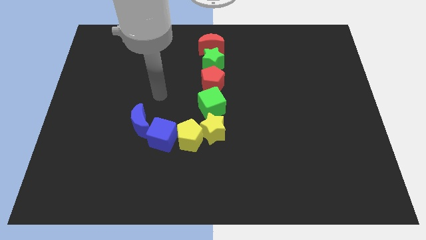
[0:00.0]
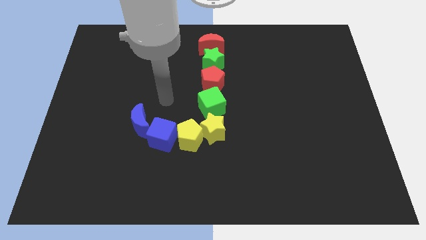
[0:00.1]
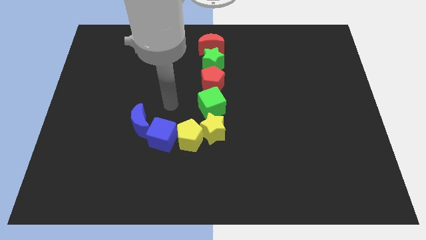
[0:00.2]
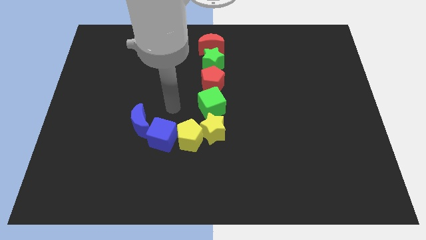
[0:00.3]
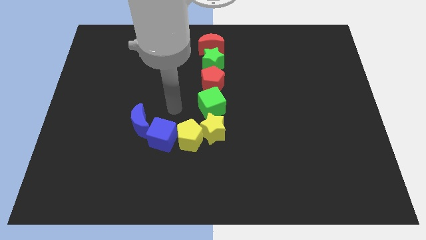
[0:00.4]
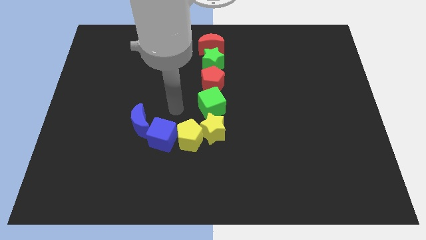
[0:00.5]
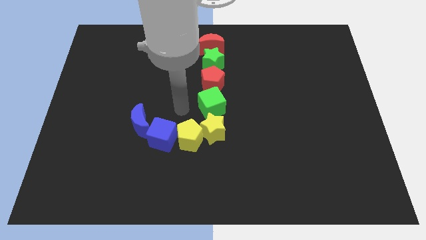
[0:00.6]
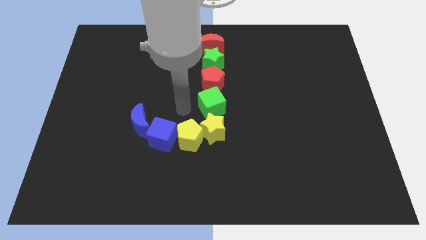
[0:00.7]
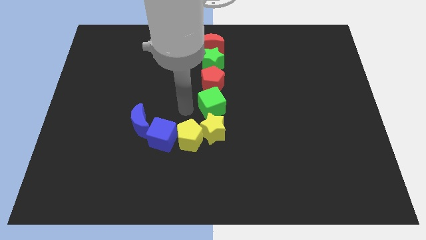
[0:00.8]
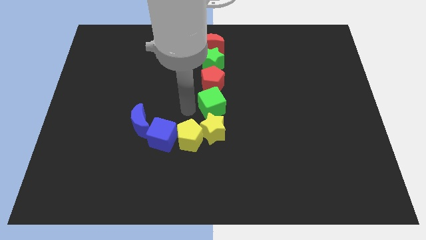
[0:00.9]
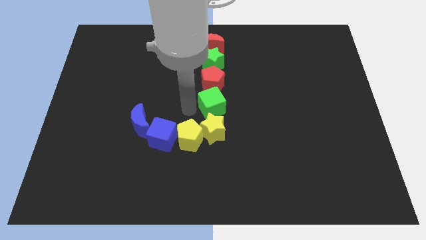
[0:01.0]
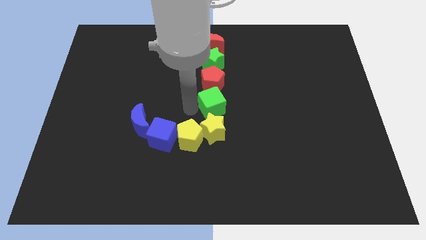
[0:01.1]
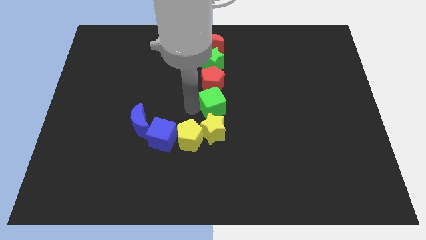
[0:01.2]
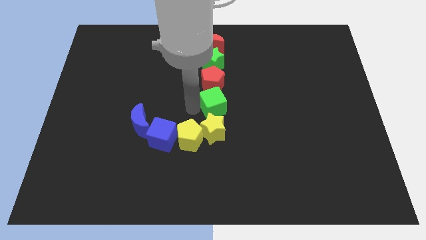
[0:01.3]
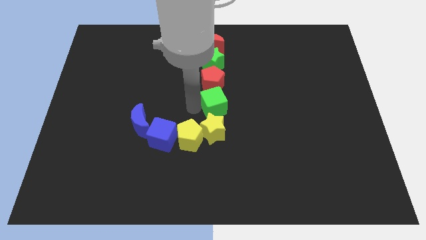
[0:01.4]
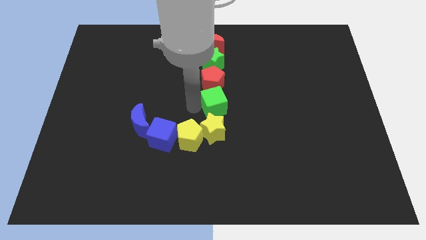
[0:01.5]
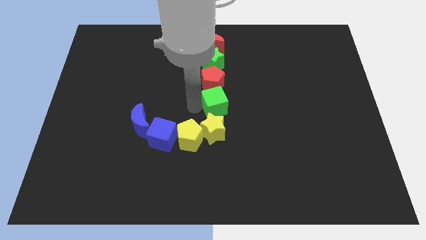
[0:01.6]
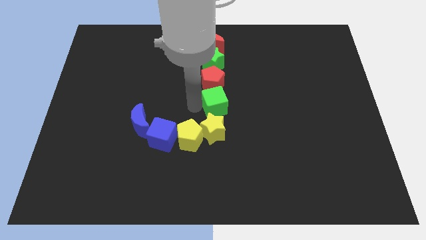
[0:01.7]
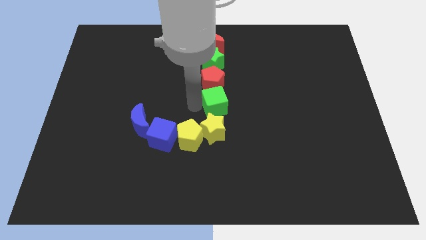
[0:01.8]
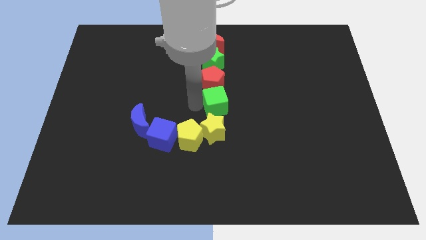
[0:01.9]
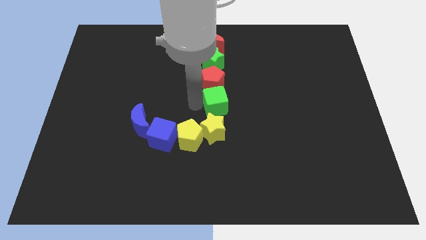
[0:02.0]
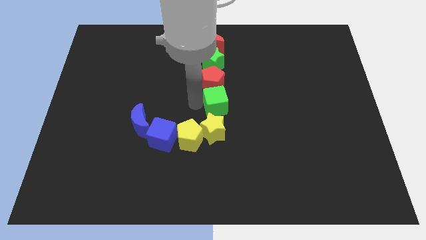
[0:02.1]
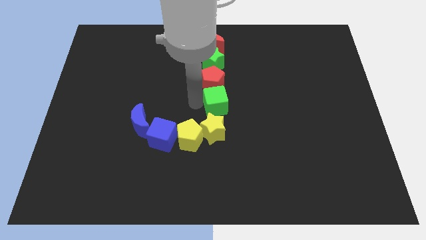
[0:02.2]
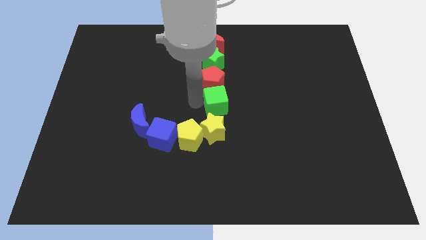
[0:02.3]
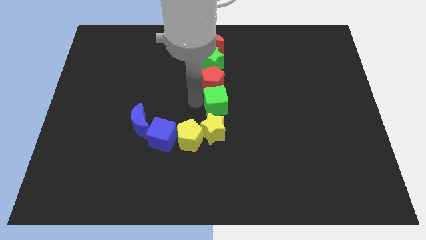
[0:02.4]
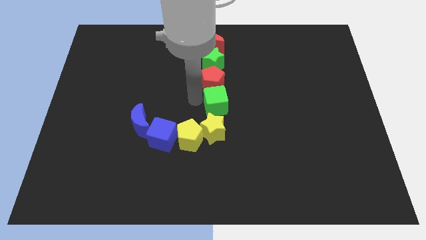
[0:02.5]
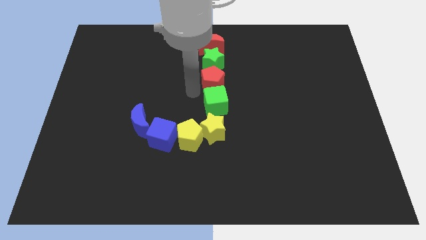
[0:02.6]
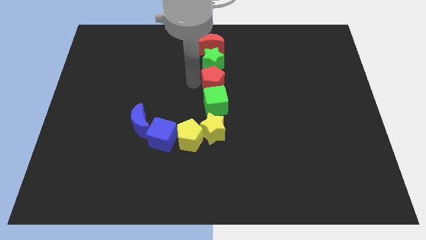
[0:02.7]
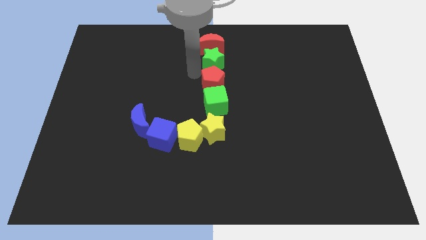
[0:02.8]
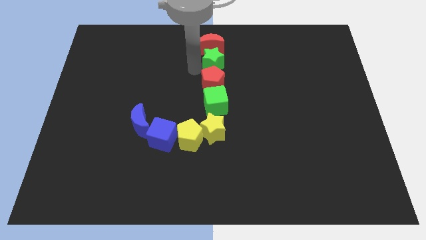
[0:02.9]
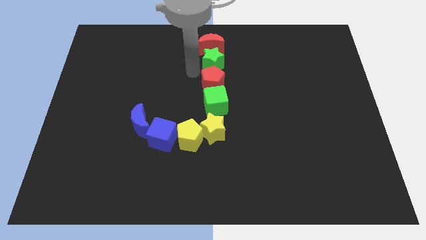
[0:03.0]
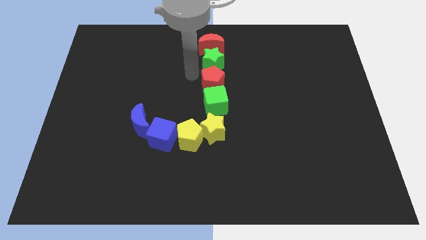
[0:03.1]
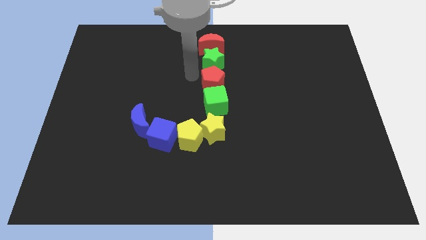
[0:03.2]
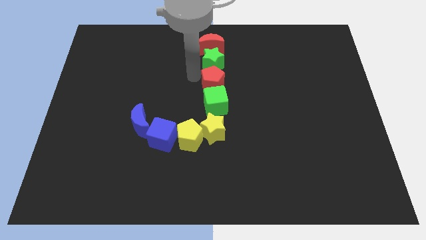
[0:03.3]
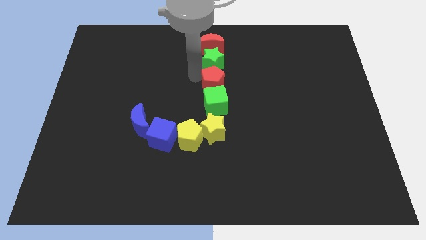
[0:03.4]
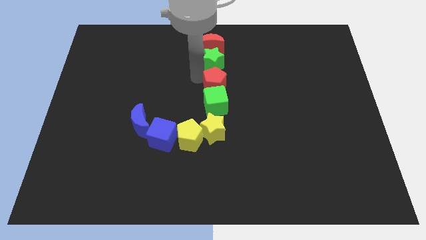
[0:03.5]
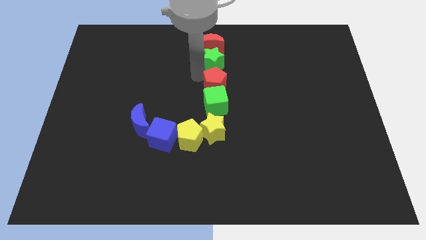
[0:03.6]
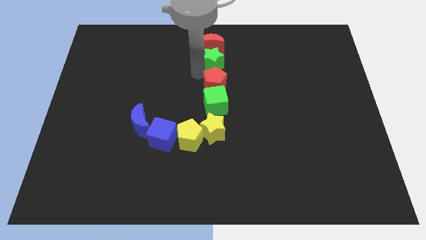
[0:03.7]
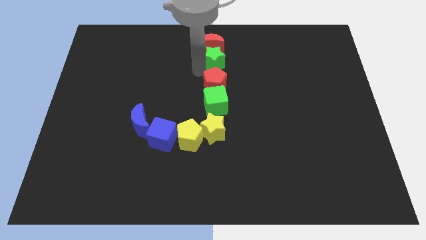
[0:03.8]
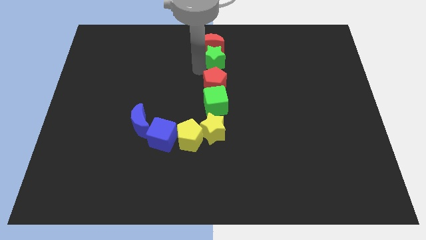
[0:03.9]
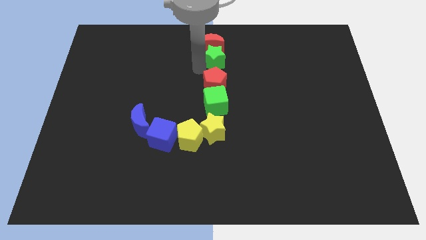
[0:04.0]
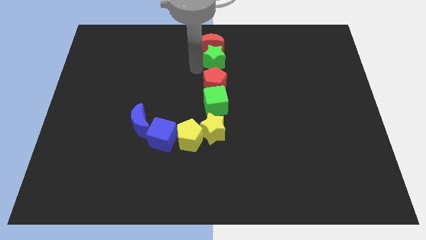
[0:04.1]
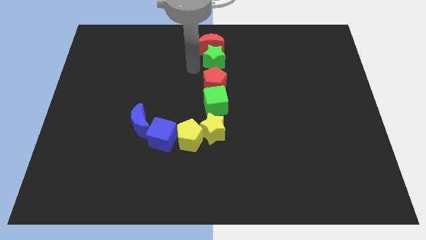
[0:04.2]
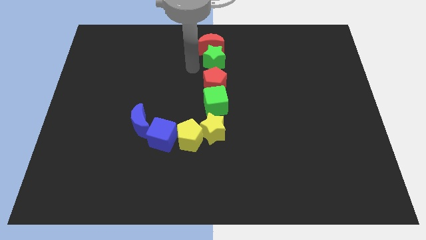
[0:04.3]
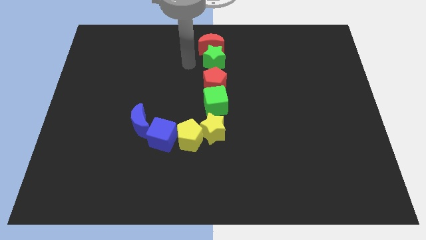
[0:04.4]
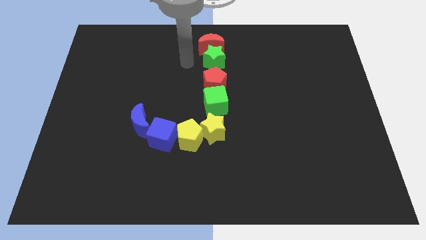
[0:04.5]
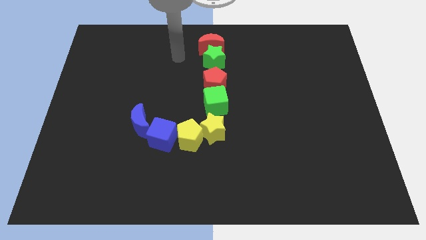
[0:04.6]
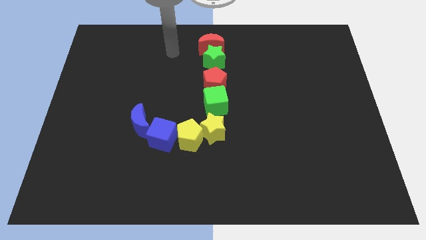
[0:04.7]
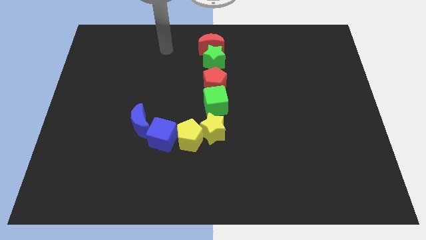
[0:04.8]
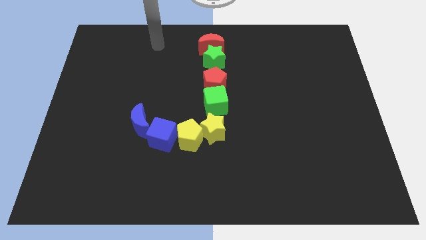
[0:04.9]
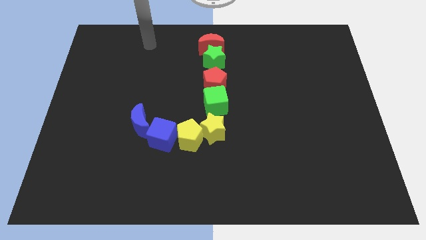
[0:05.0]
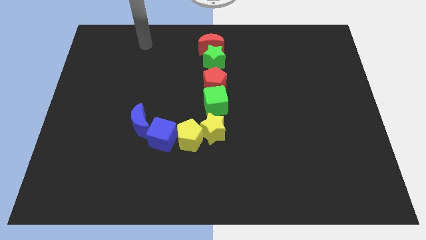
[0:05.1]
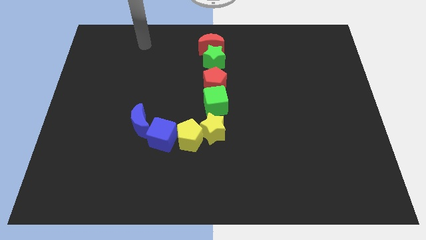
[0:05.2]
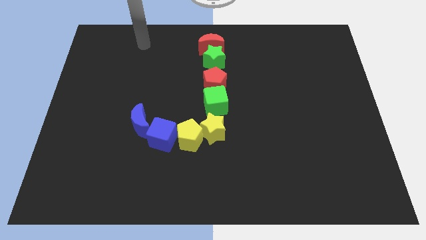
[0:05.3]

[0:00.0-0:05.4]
push the green cube red pentagon and green star slighlty to the right

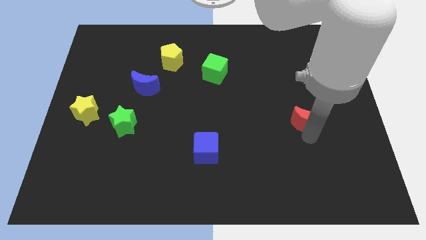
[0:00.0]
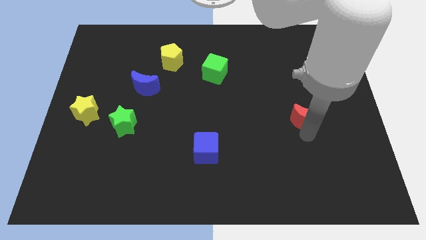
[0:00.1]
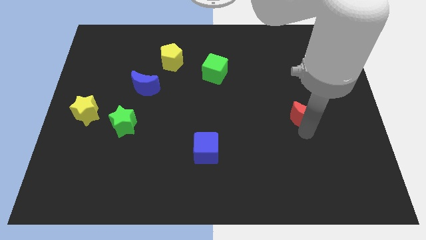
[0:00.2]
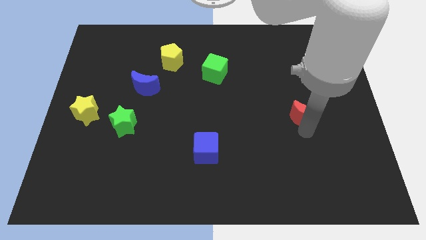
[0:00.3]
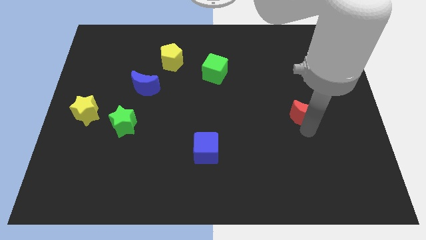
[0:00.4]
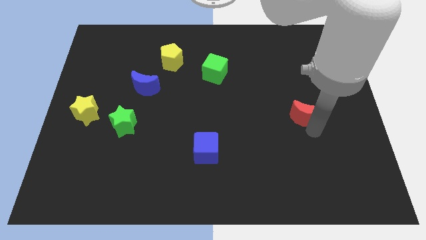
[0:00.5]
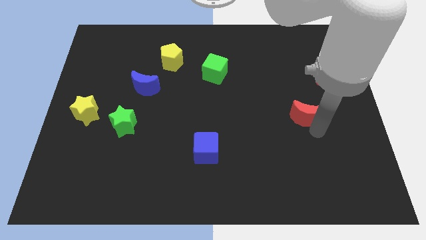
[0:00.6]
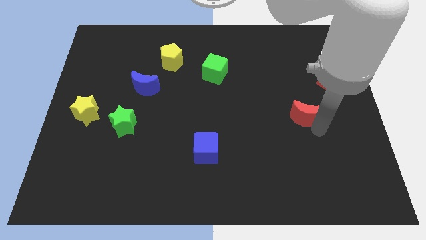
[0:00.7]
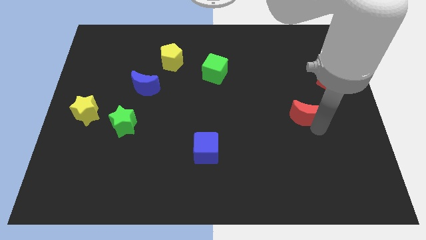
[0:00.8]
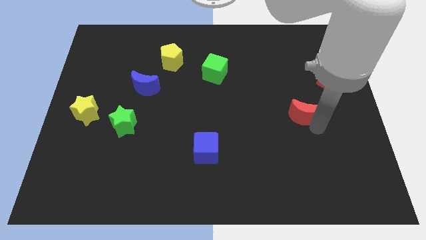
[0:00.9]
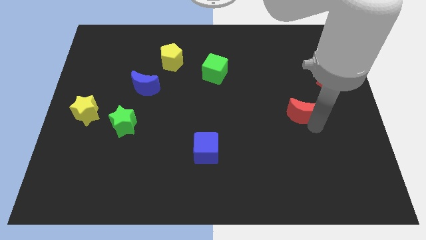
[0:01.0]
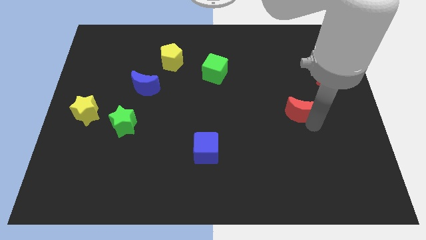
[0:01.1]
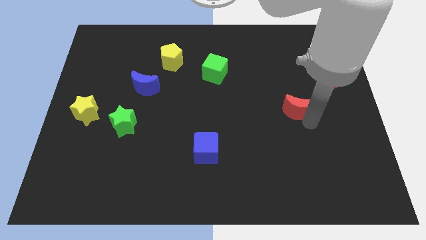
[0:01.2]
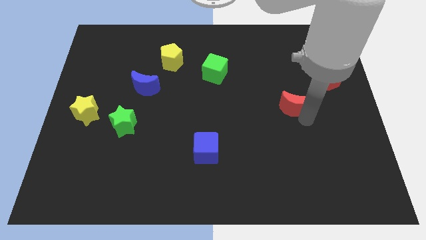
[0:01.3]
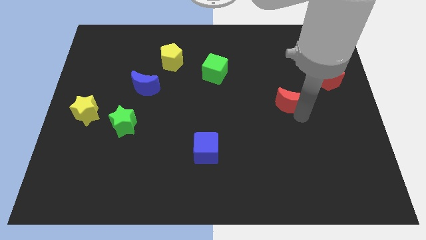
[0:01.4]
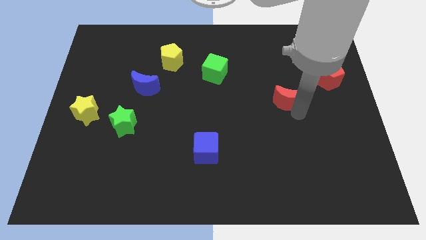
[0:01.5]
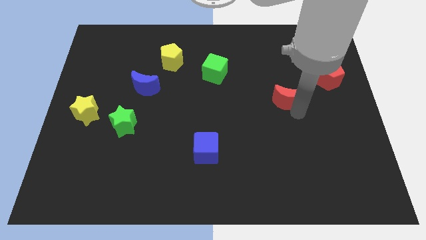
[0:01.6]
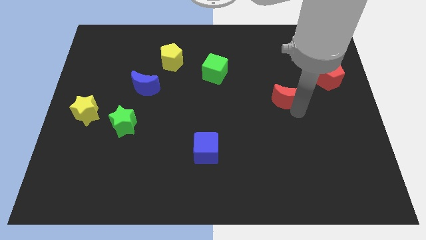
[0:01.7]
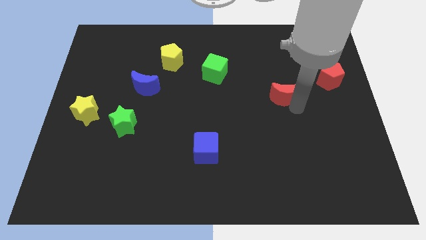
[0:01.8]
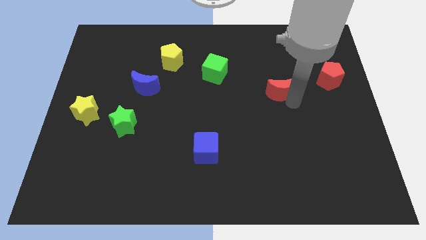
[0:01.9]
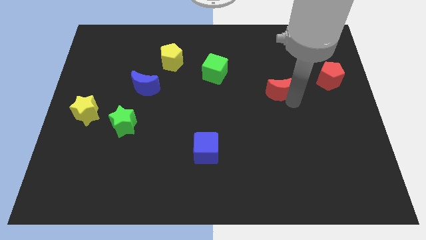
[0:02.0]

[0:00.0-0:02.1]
place the red crescent to the right of the blue crescent

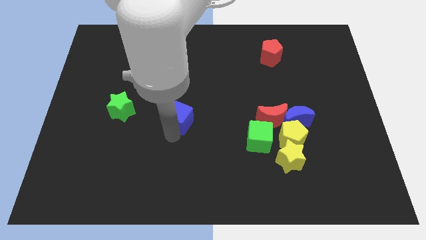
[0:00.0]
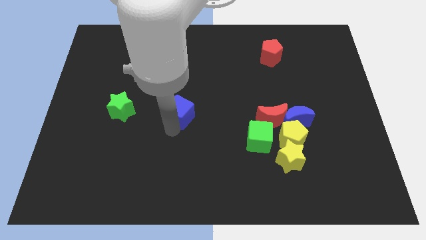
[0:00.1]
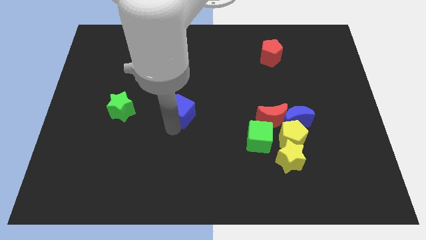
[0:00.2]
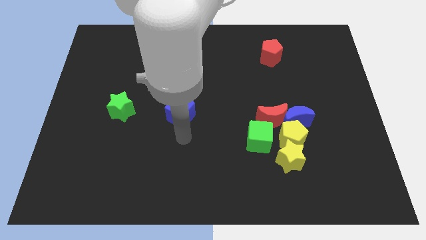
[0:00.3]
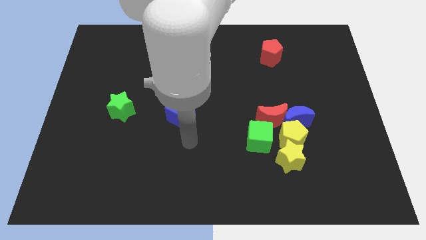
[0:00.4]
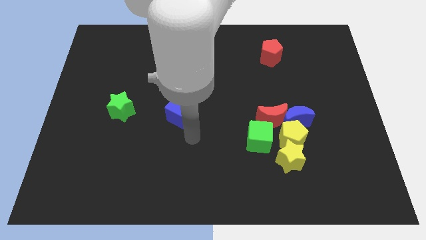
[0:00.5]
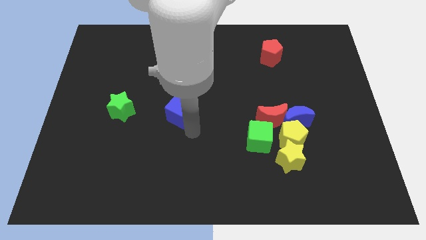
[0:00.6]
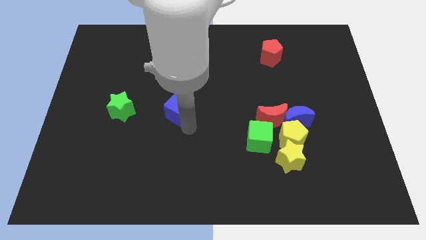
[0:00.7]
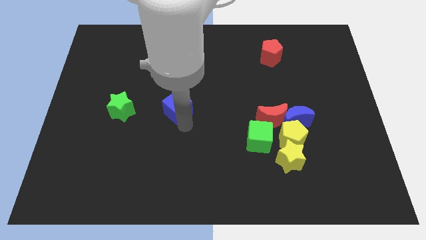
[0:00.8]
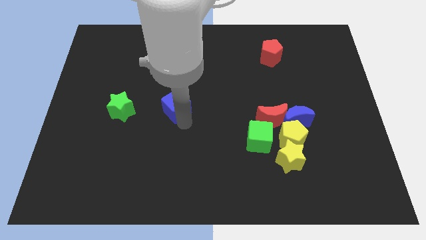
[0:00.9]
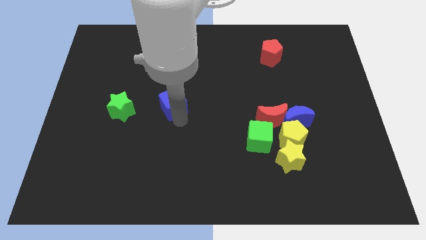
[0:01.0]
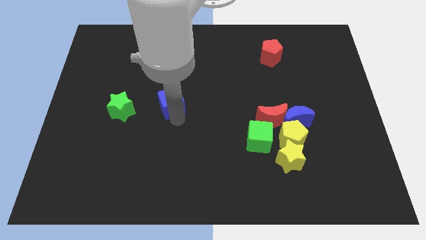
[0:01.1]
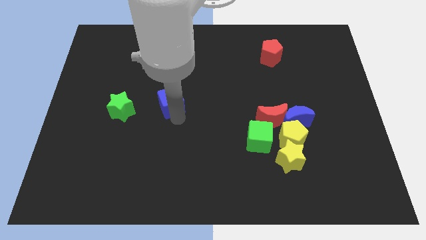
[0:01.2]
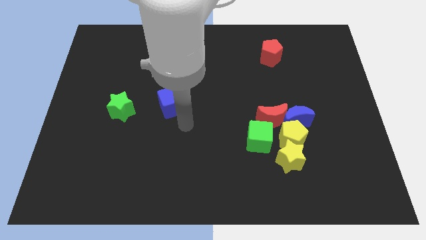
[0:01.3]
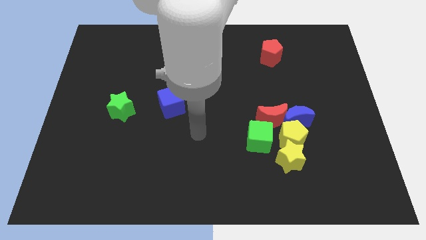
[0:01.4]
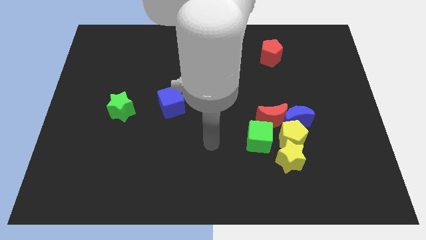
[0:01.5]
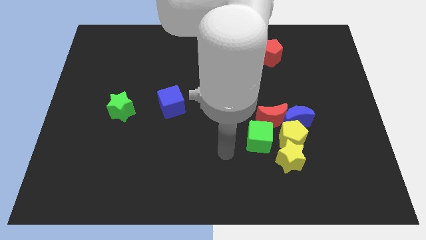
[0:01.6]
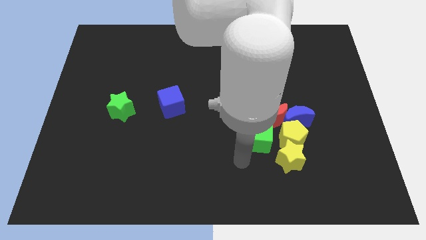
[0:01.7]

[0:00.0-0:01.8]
place the blue cube next to the right side of the green star
